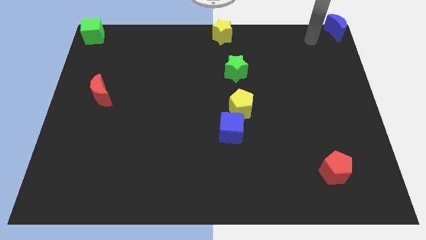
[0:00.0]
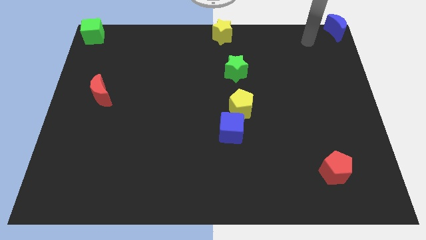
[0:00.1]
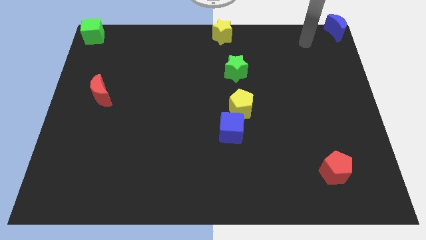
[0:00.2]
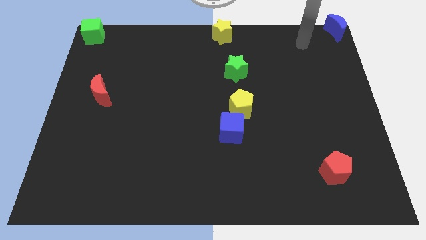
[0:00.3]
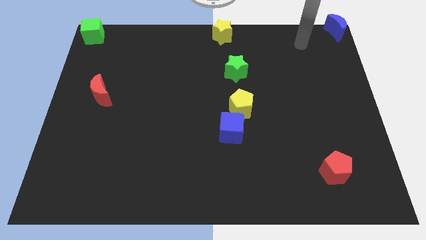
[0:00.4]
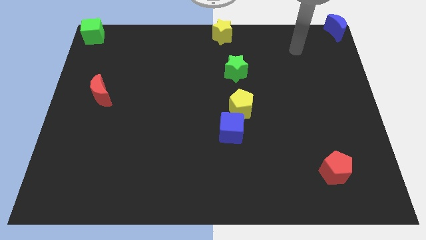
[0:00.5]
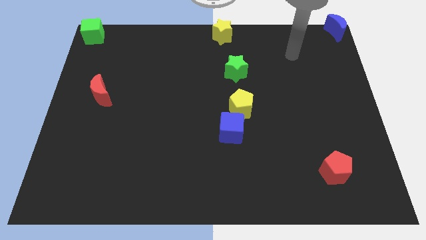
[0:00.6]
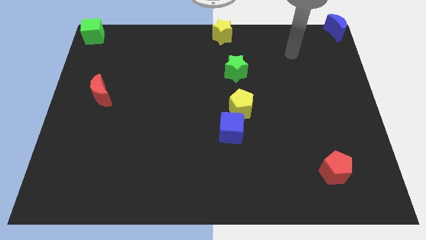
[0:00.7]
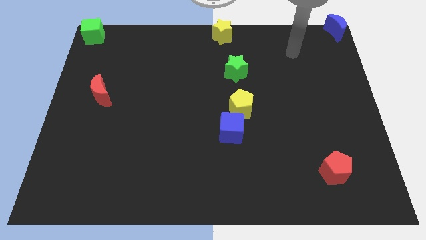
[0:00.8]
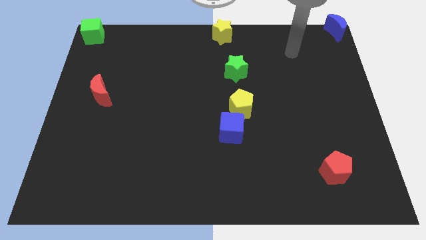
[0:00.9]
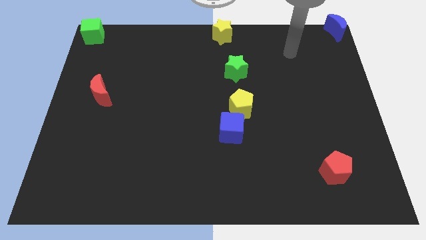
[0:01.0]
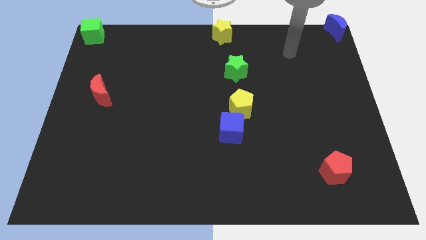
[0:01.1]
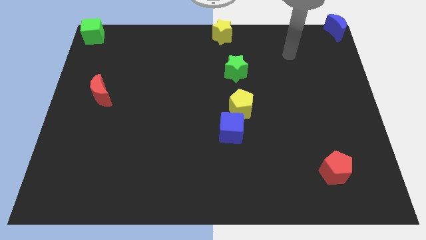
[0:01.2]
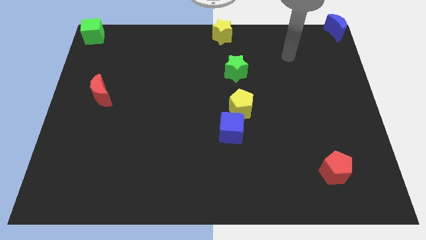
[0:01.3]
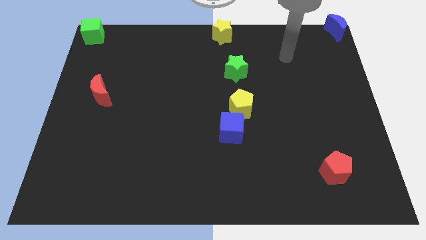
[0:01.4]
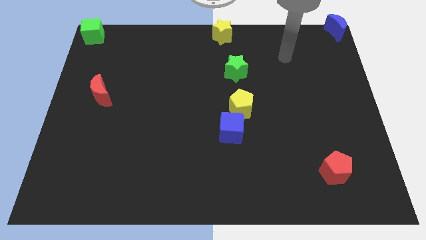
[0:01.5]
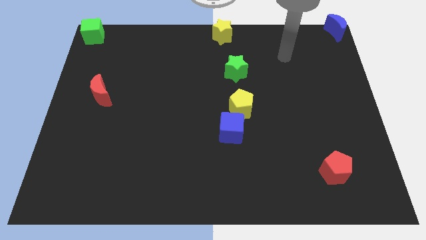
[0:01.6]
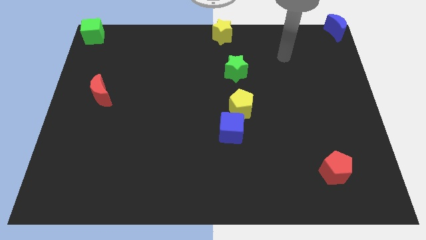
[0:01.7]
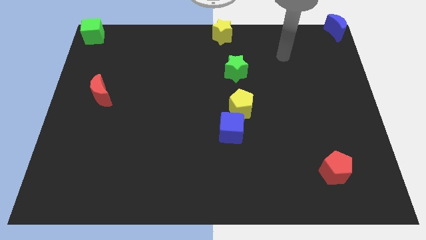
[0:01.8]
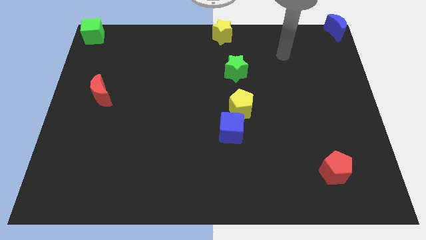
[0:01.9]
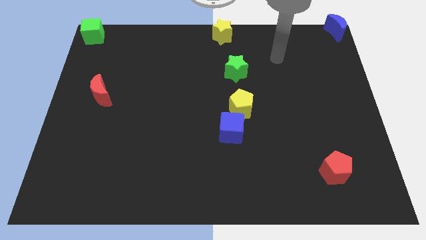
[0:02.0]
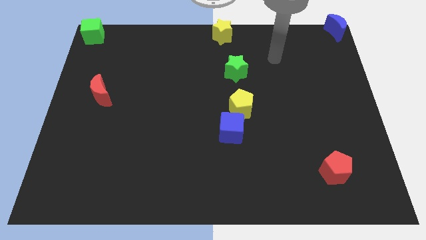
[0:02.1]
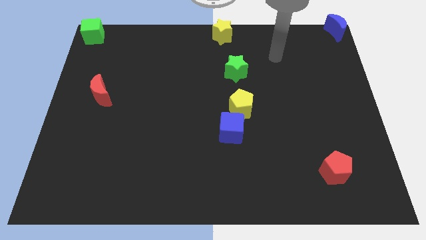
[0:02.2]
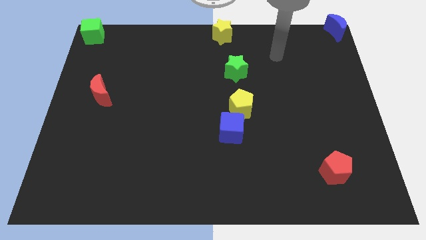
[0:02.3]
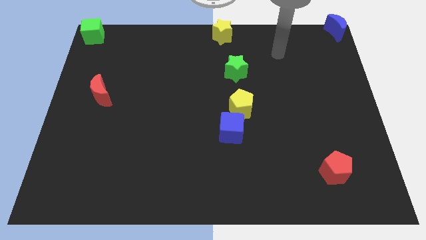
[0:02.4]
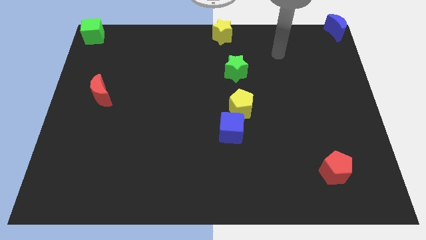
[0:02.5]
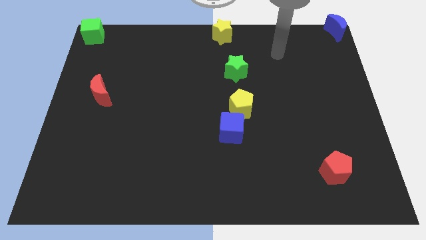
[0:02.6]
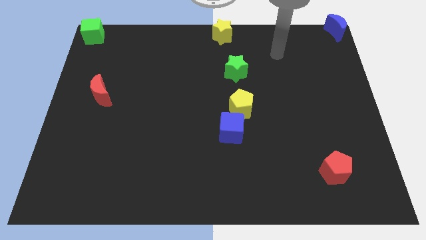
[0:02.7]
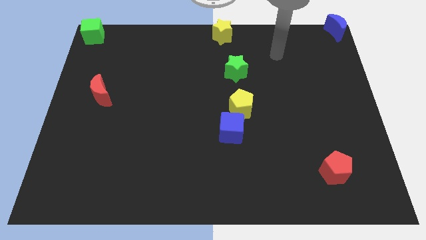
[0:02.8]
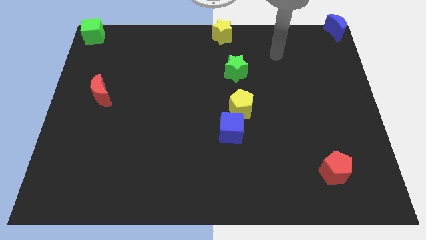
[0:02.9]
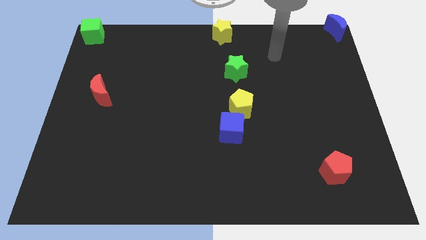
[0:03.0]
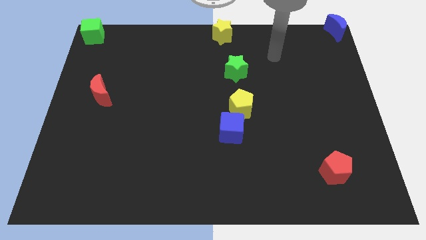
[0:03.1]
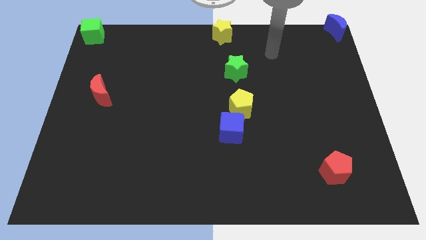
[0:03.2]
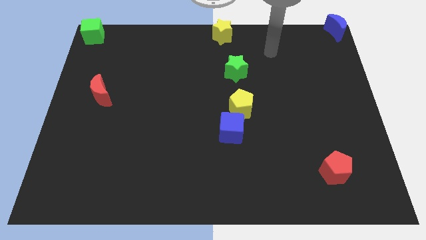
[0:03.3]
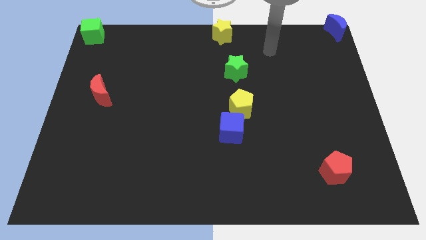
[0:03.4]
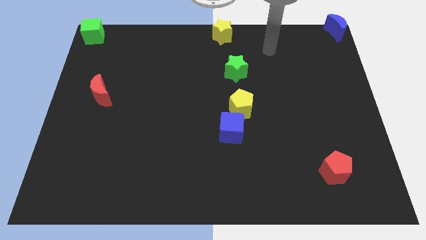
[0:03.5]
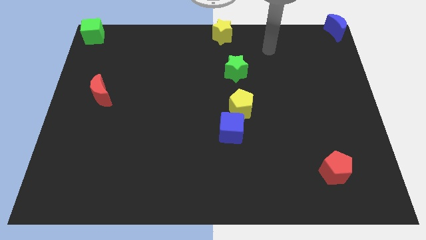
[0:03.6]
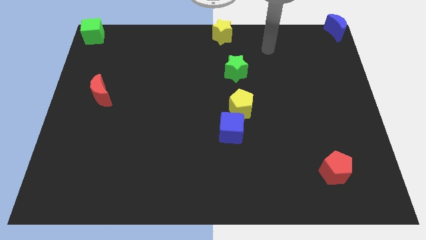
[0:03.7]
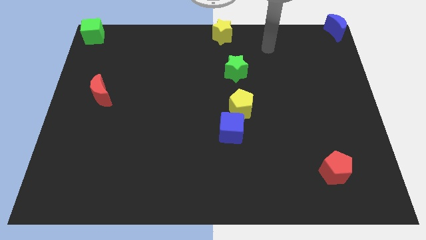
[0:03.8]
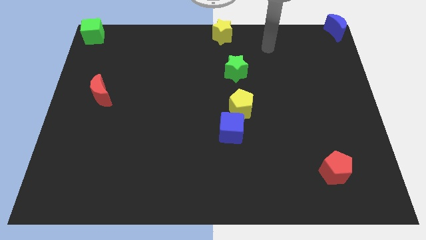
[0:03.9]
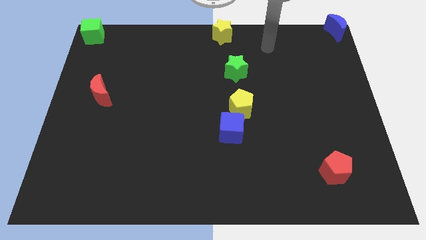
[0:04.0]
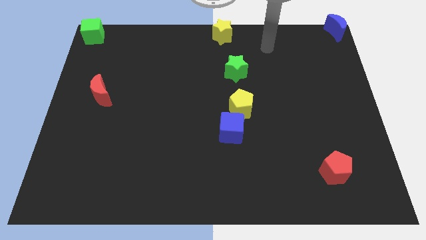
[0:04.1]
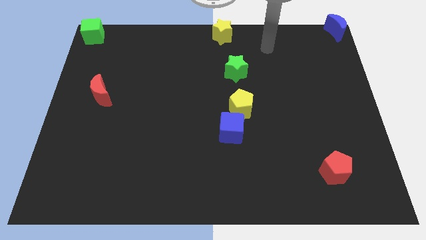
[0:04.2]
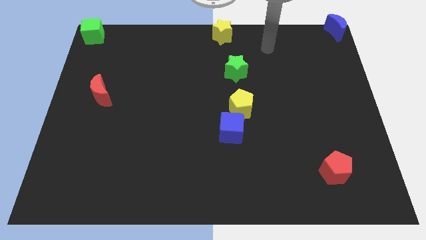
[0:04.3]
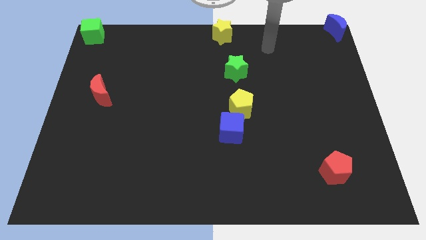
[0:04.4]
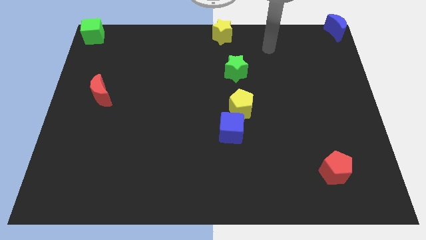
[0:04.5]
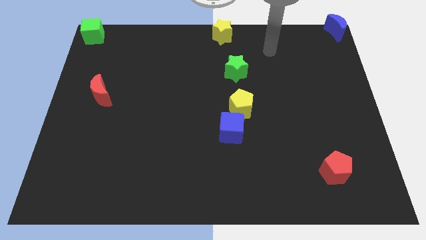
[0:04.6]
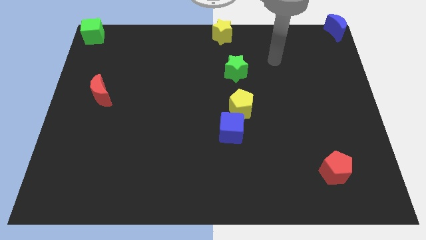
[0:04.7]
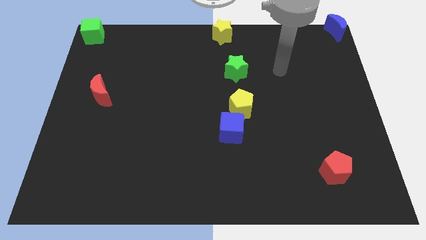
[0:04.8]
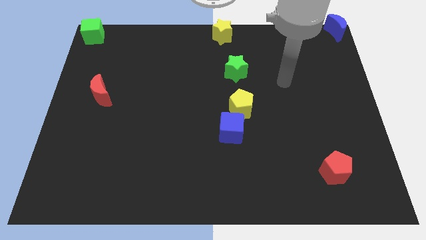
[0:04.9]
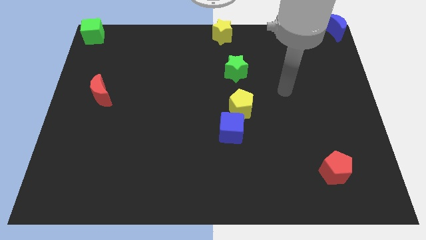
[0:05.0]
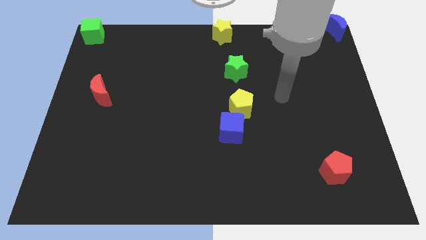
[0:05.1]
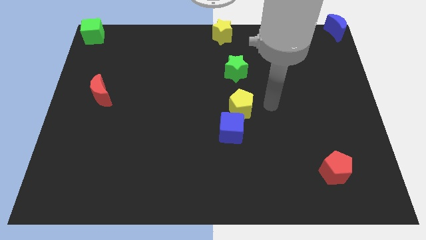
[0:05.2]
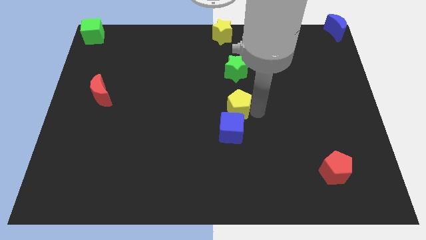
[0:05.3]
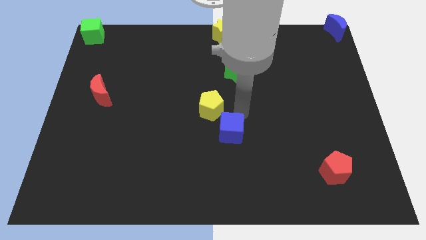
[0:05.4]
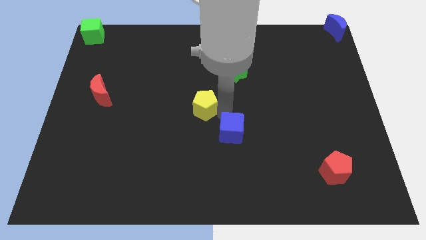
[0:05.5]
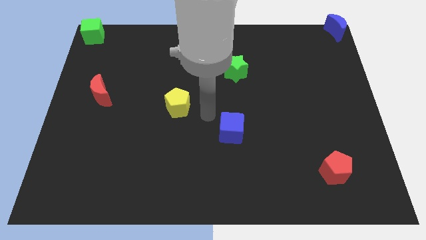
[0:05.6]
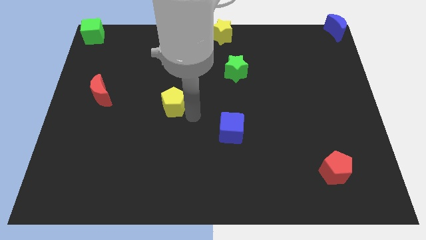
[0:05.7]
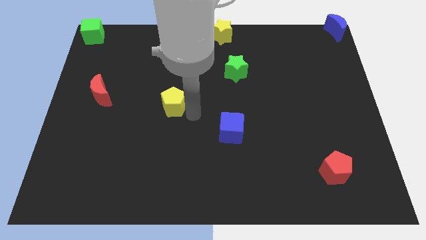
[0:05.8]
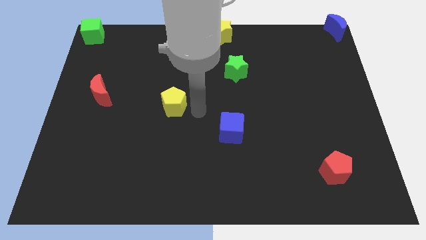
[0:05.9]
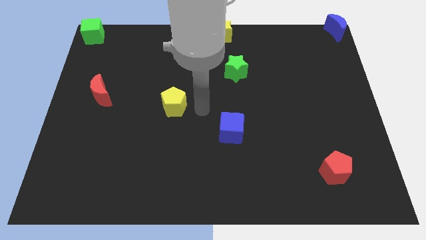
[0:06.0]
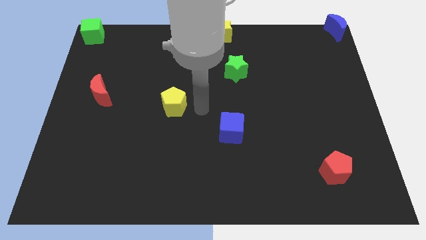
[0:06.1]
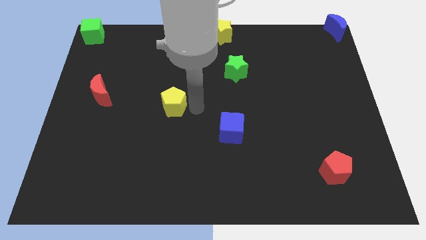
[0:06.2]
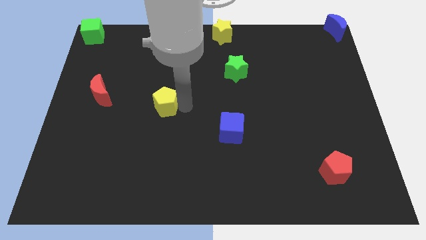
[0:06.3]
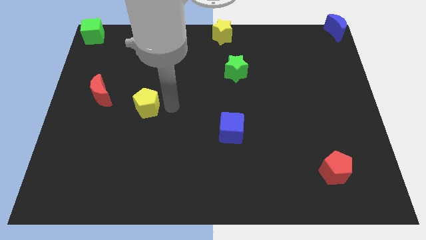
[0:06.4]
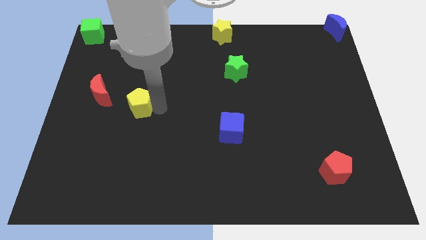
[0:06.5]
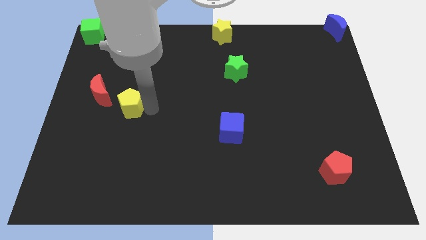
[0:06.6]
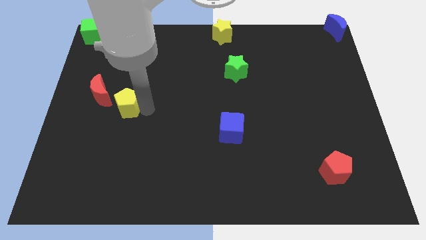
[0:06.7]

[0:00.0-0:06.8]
move the yellow pentagon diagonally right to the red crescent

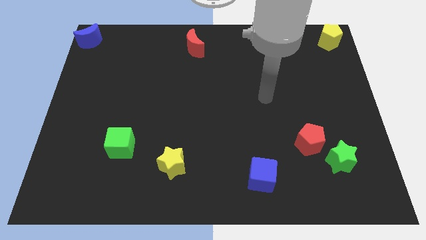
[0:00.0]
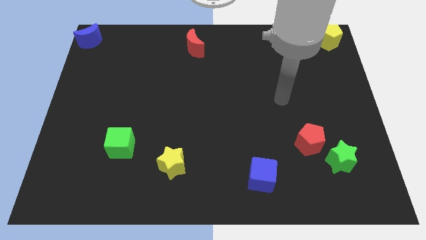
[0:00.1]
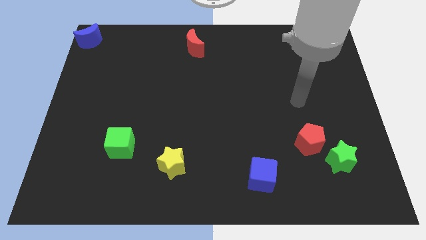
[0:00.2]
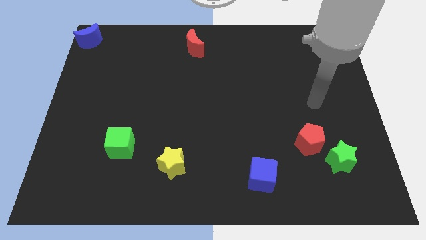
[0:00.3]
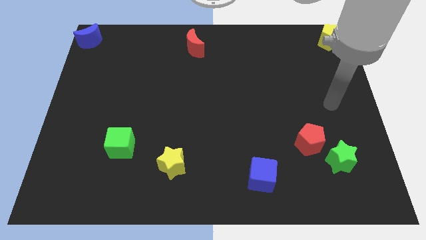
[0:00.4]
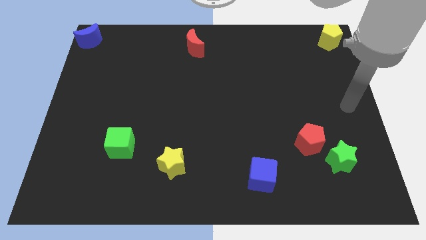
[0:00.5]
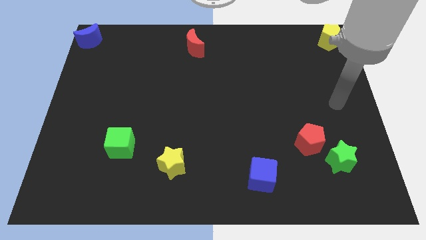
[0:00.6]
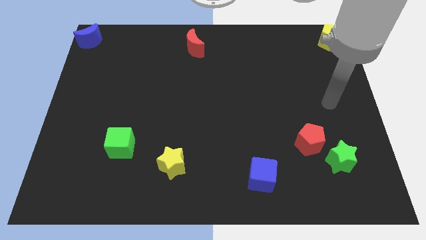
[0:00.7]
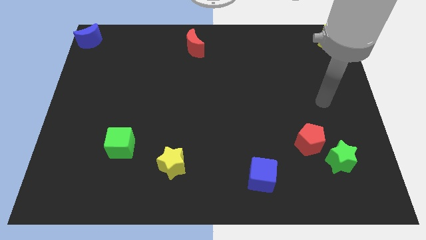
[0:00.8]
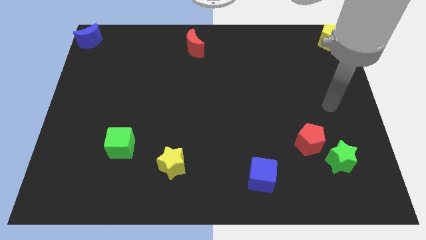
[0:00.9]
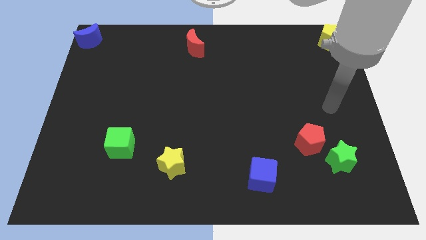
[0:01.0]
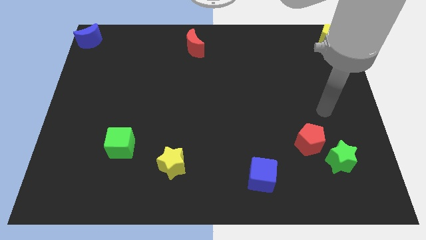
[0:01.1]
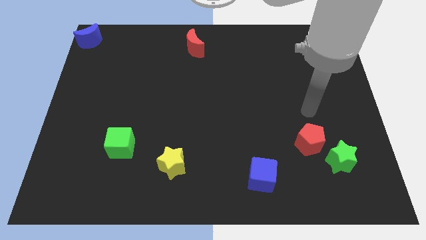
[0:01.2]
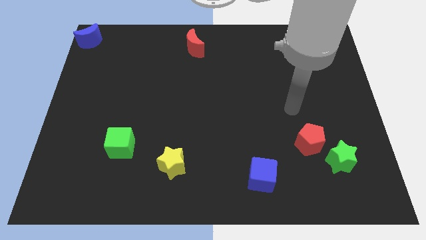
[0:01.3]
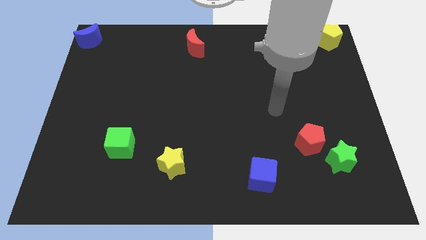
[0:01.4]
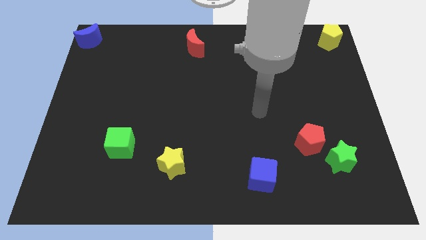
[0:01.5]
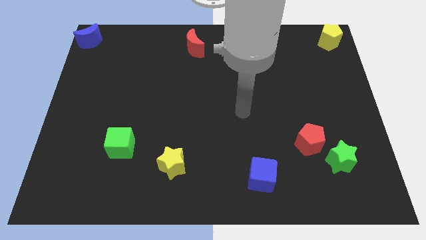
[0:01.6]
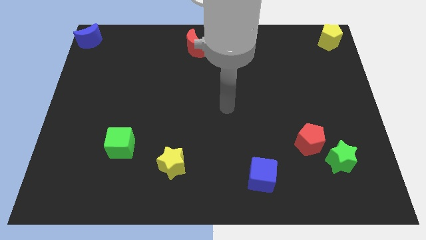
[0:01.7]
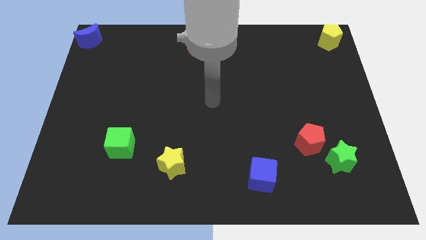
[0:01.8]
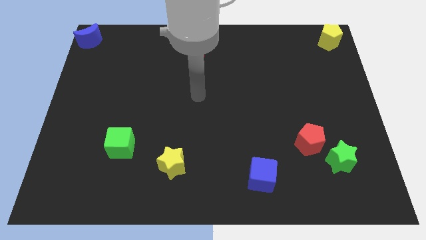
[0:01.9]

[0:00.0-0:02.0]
place your arm at the center of the board

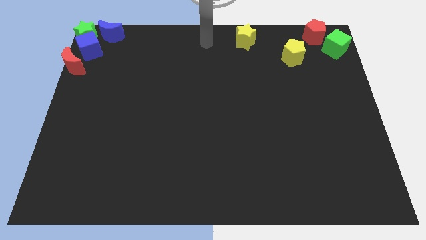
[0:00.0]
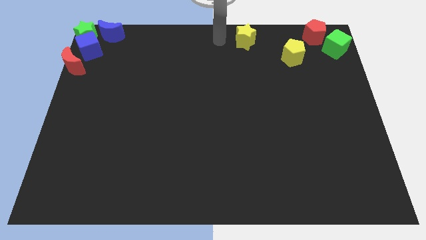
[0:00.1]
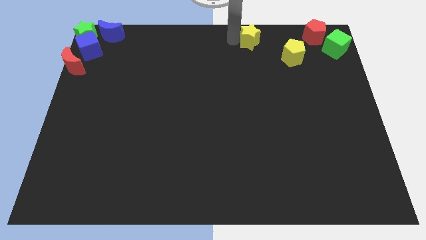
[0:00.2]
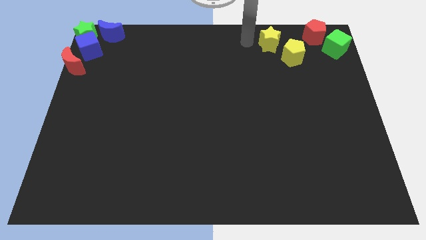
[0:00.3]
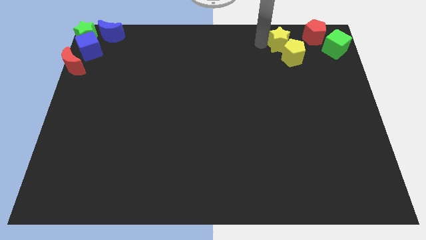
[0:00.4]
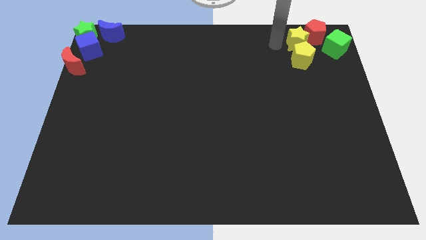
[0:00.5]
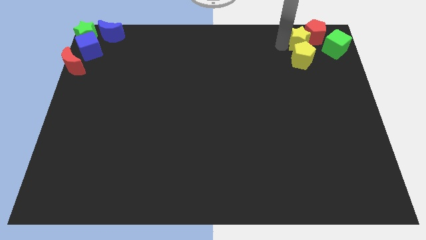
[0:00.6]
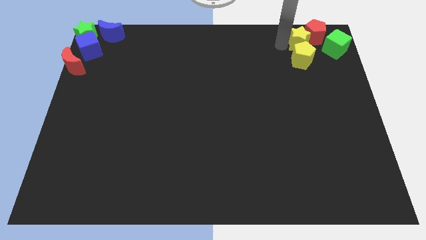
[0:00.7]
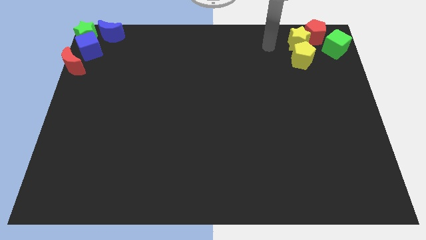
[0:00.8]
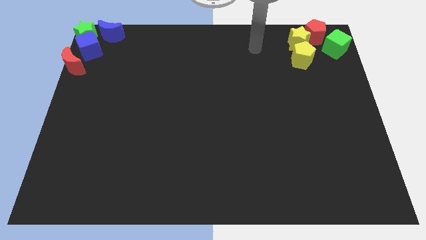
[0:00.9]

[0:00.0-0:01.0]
push the yellow star into the red pentagon
